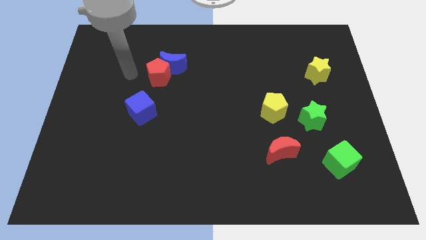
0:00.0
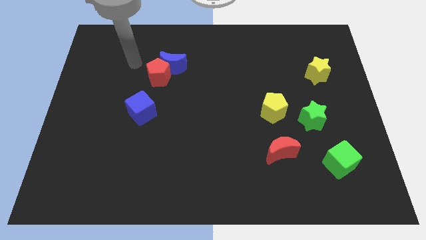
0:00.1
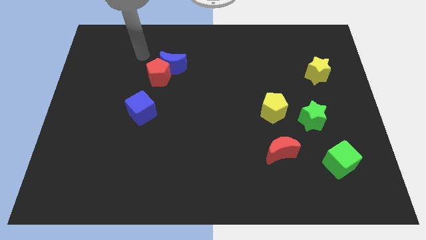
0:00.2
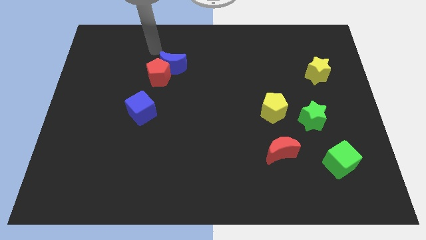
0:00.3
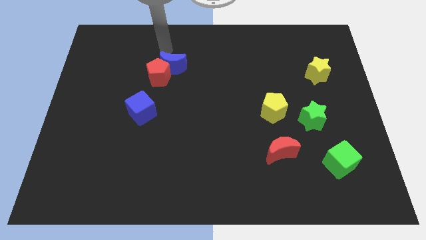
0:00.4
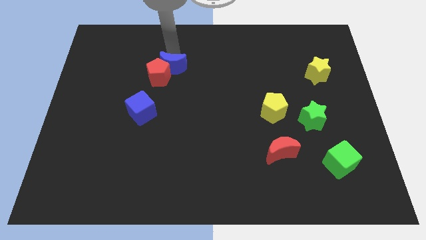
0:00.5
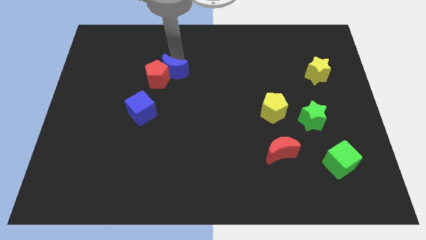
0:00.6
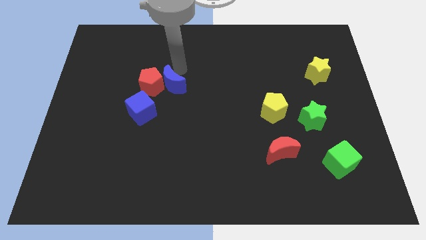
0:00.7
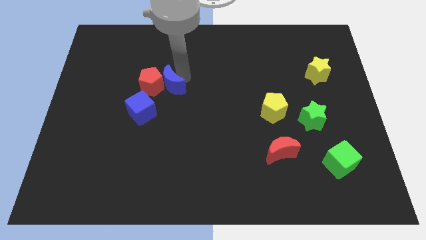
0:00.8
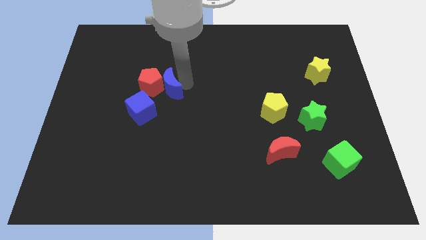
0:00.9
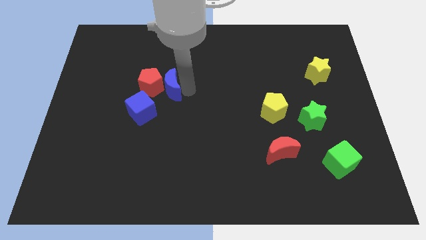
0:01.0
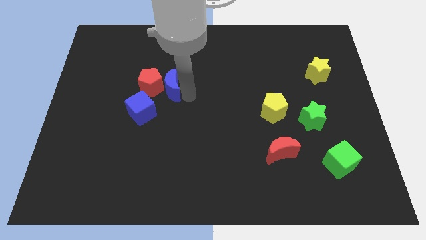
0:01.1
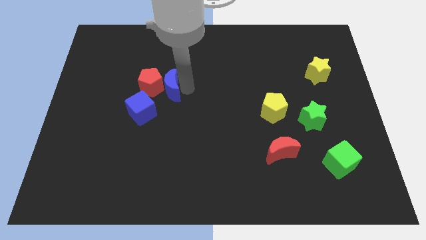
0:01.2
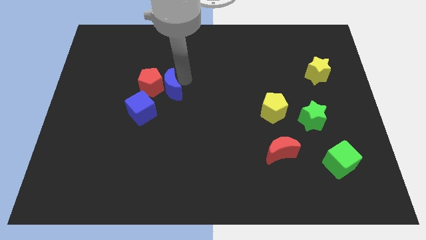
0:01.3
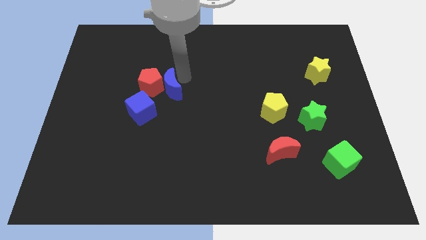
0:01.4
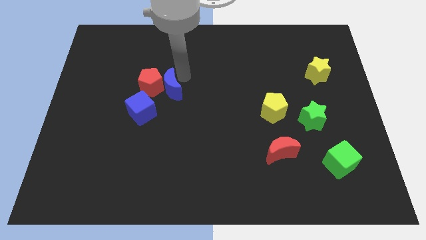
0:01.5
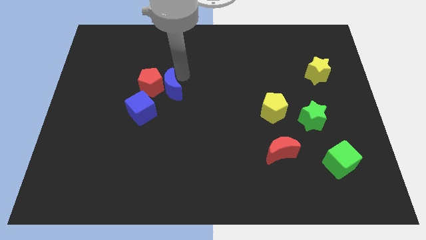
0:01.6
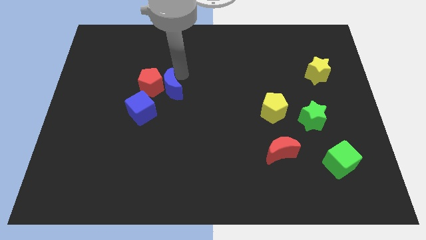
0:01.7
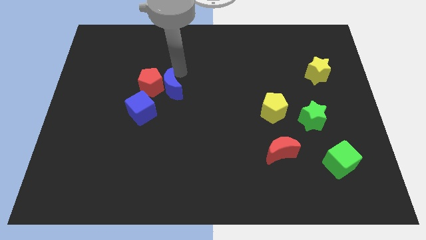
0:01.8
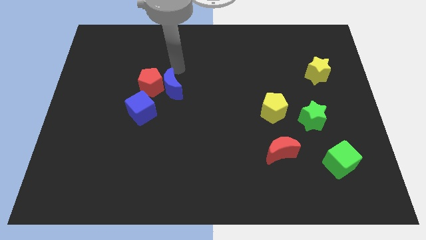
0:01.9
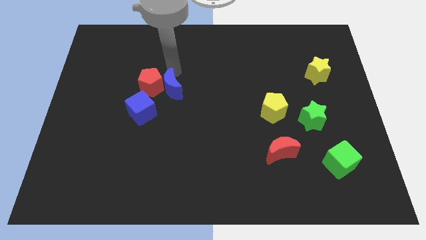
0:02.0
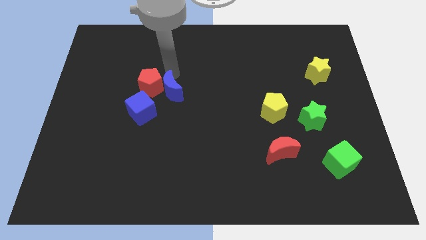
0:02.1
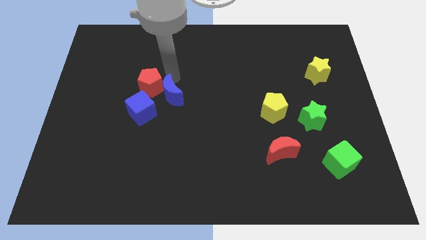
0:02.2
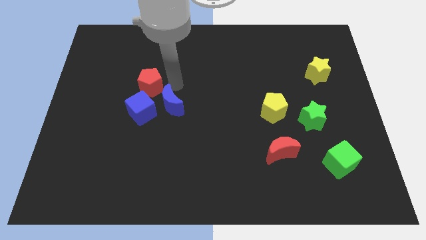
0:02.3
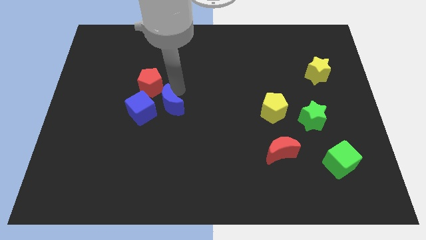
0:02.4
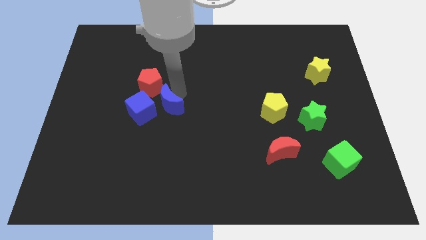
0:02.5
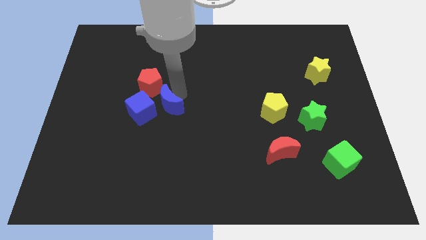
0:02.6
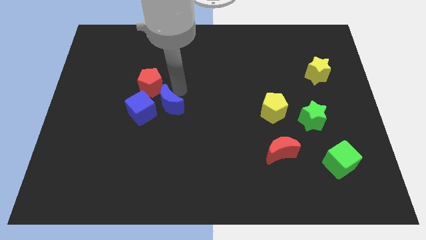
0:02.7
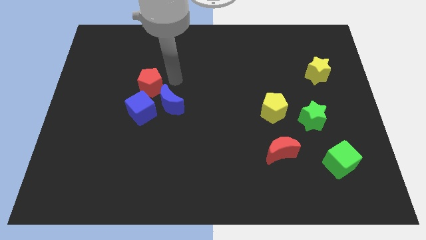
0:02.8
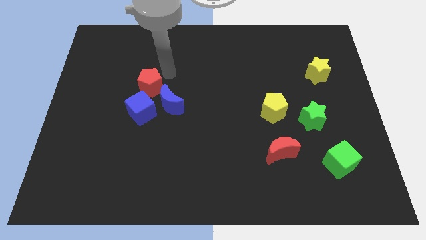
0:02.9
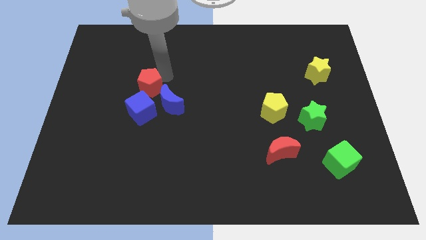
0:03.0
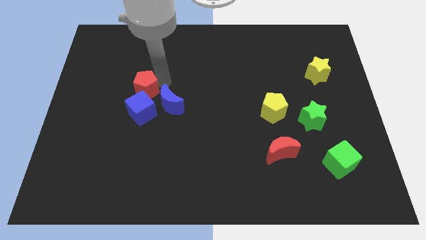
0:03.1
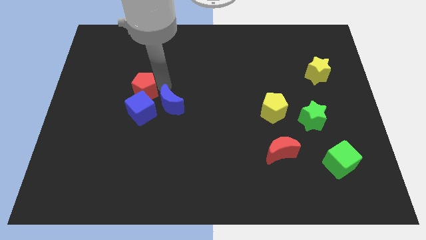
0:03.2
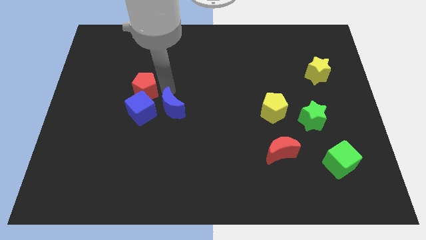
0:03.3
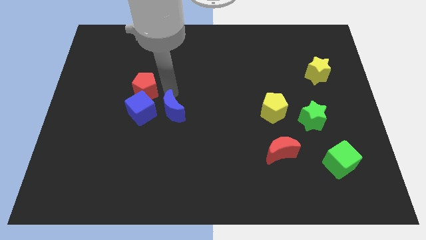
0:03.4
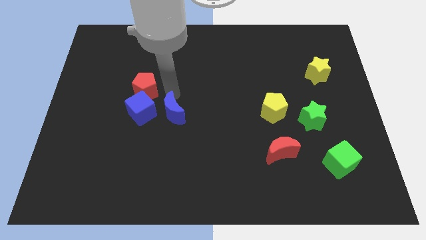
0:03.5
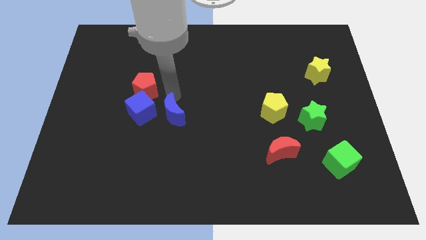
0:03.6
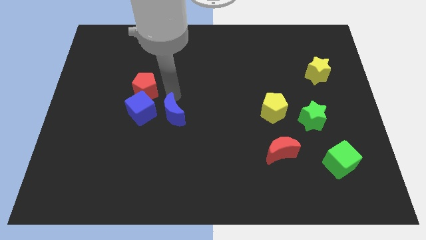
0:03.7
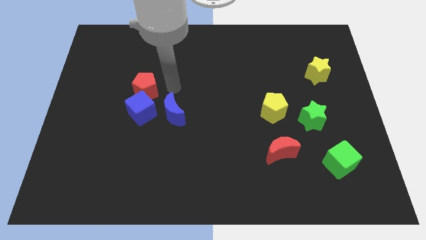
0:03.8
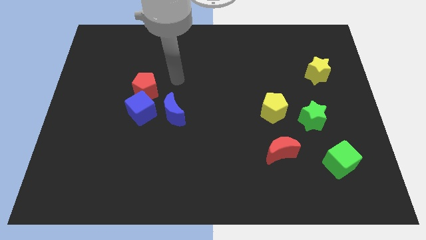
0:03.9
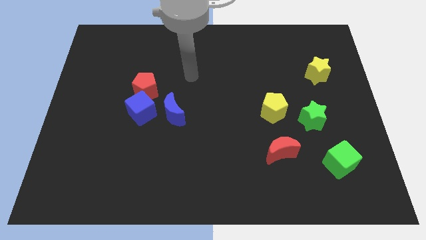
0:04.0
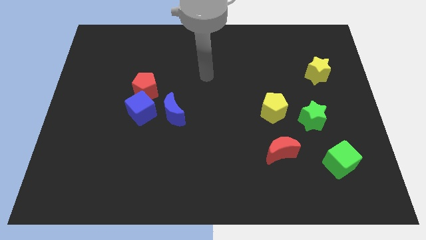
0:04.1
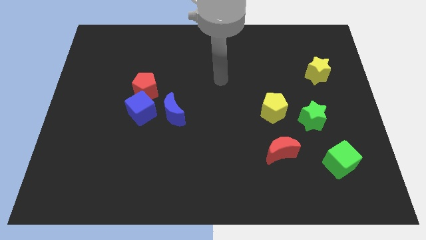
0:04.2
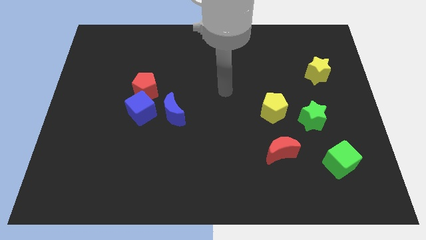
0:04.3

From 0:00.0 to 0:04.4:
move the blue moon right beside the blue cube

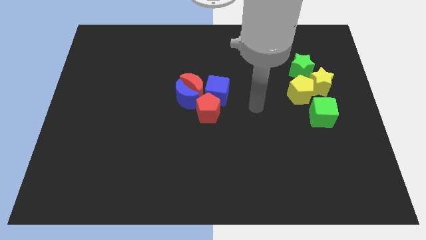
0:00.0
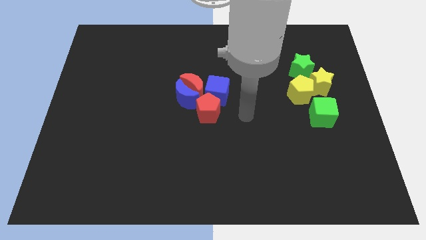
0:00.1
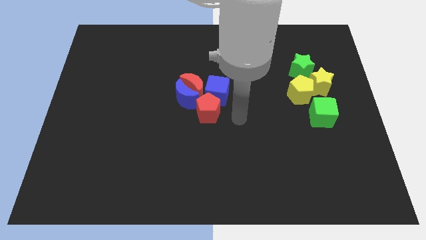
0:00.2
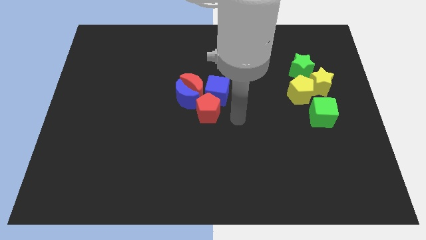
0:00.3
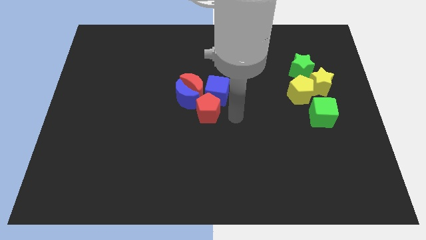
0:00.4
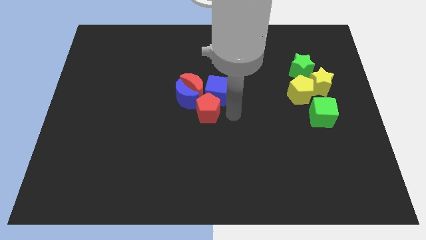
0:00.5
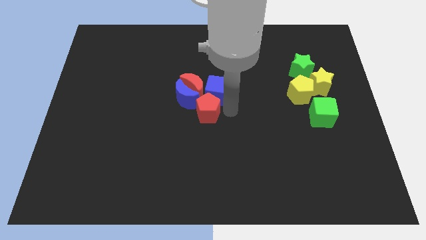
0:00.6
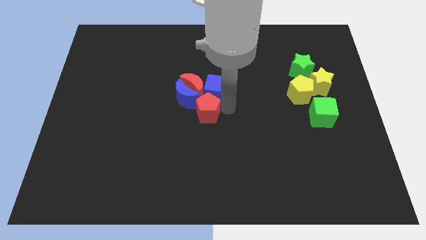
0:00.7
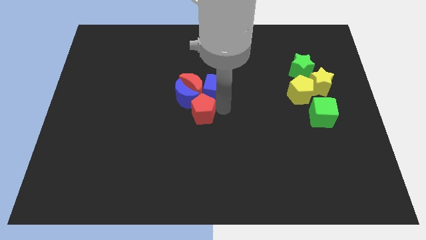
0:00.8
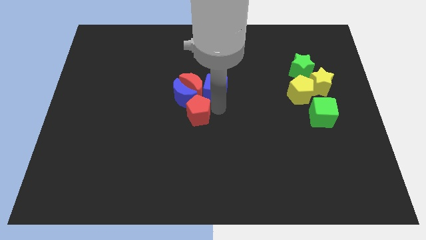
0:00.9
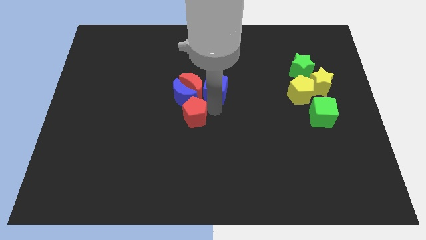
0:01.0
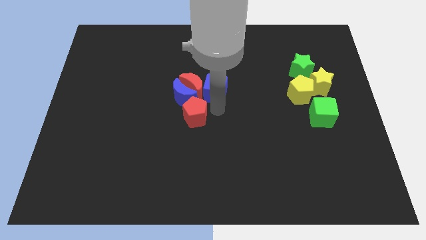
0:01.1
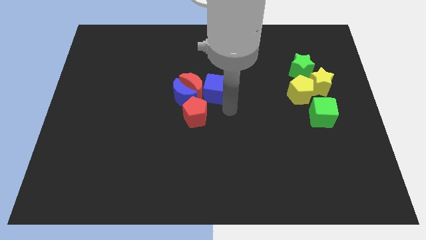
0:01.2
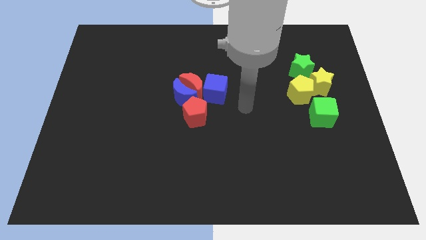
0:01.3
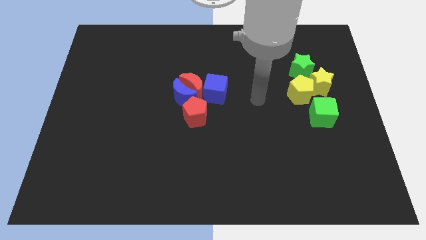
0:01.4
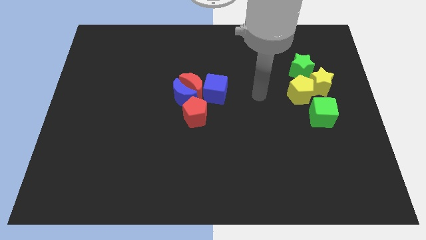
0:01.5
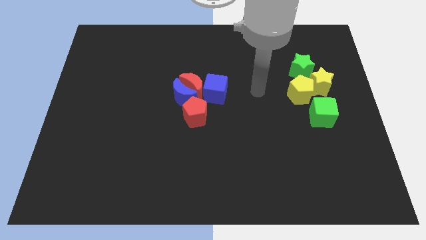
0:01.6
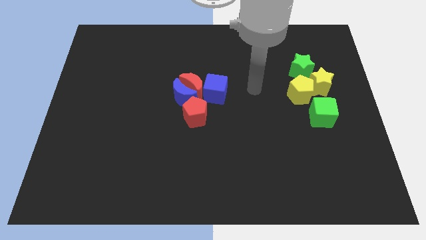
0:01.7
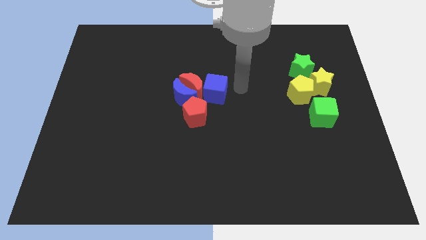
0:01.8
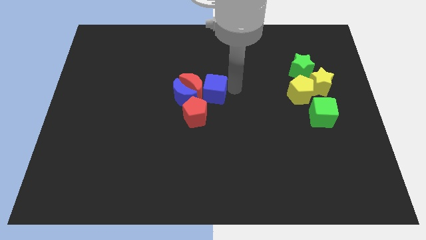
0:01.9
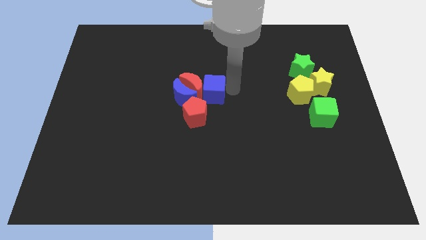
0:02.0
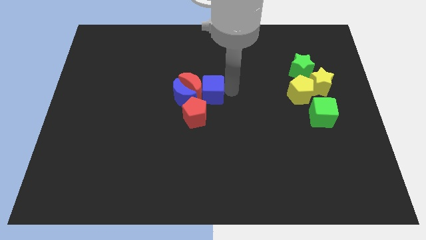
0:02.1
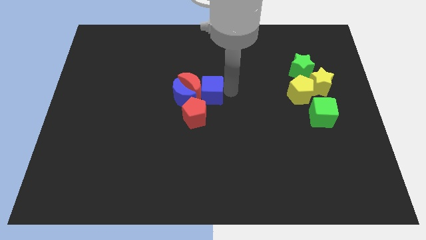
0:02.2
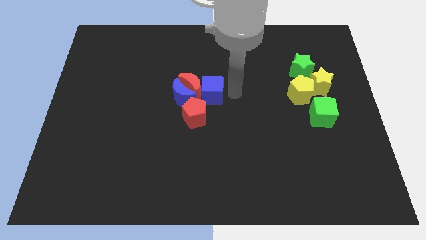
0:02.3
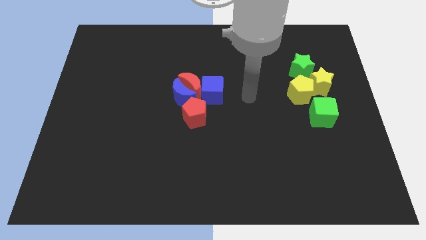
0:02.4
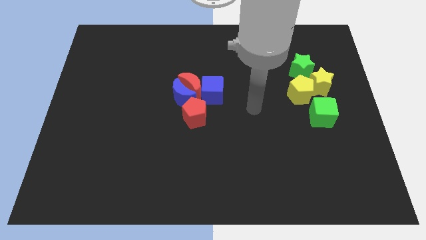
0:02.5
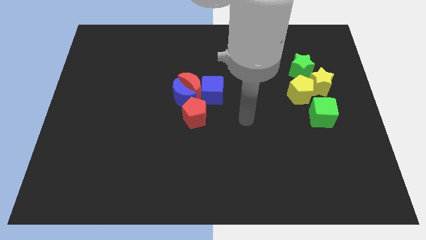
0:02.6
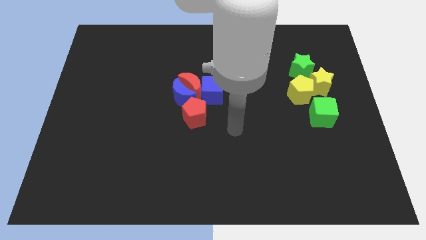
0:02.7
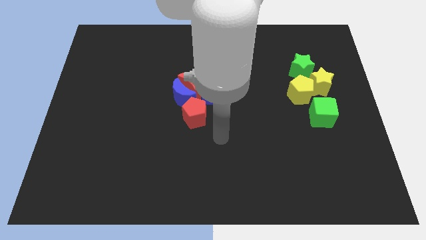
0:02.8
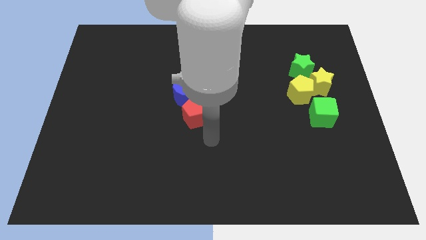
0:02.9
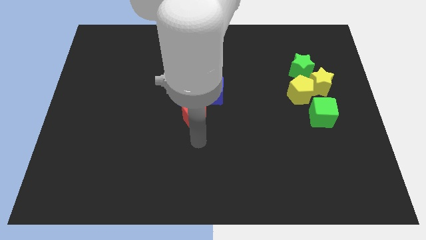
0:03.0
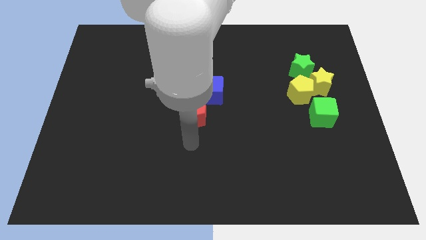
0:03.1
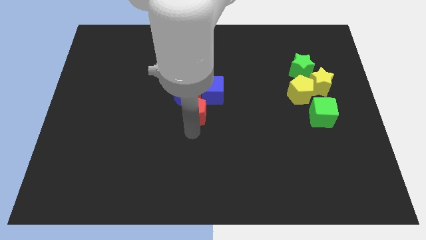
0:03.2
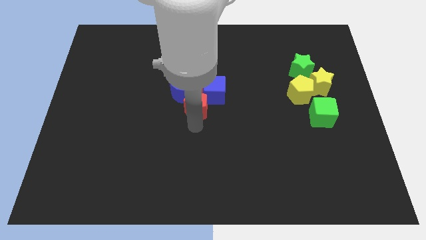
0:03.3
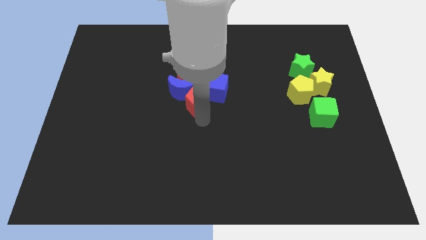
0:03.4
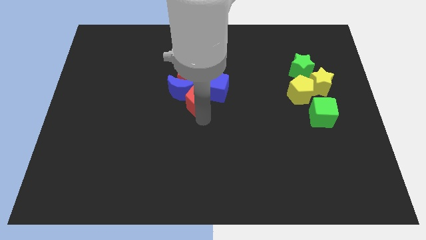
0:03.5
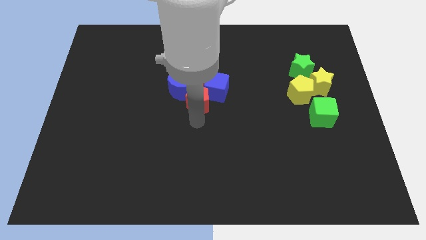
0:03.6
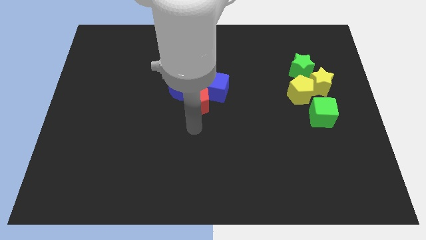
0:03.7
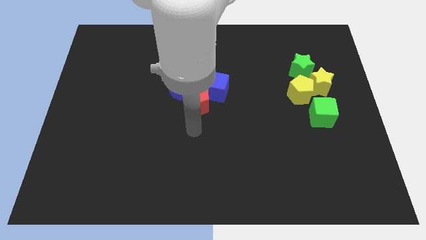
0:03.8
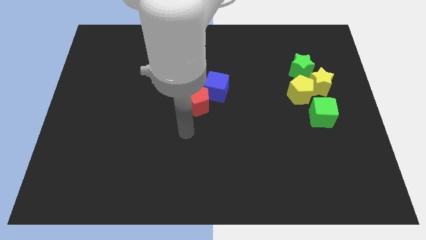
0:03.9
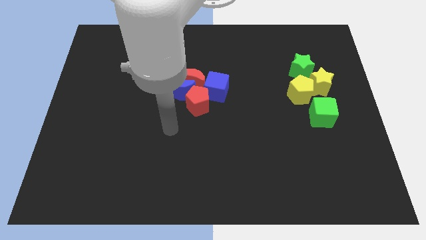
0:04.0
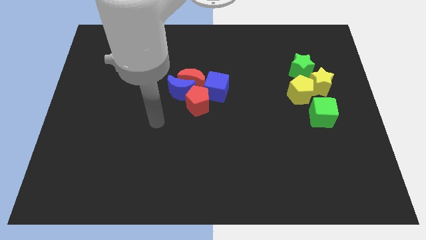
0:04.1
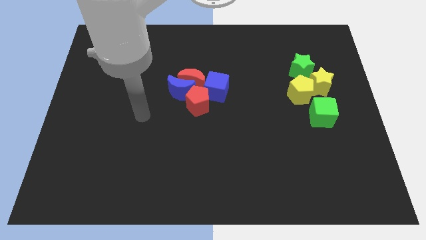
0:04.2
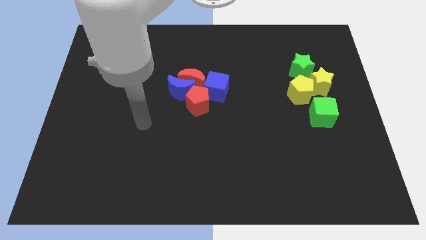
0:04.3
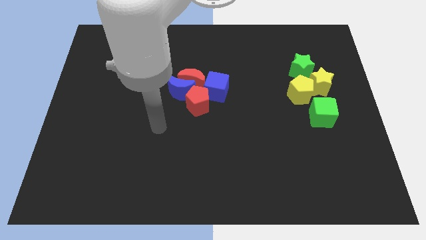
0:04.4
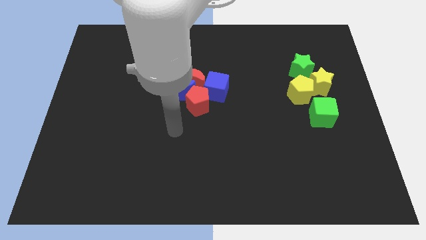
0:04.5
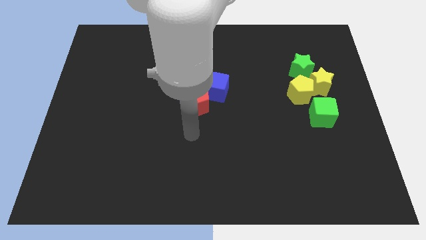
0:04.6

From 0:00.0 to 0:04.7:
adjust red and blue blocks at the center of the board
